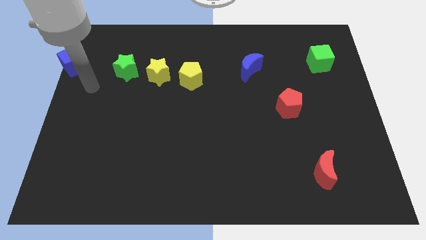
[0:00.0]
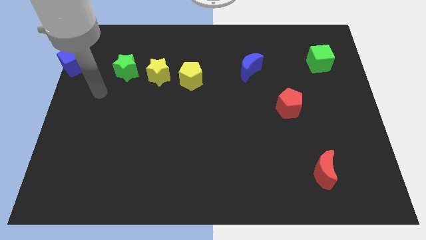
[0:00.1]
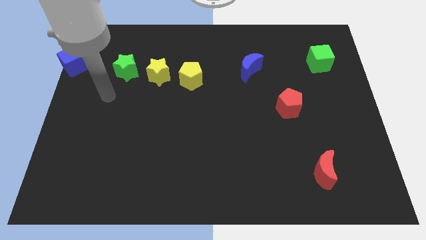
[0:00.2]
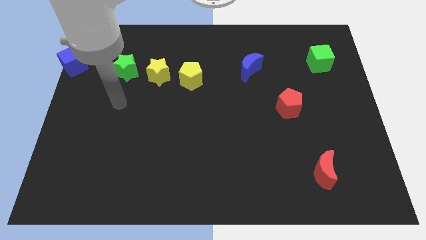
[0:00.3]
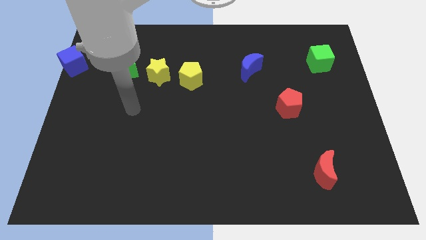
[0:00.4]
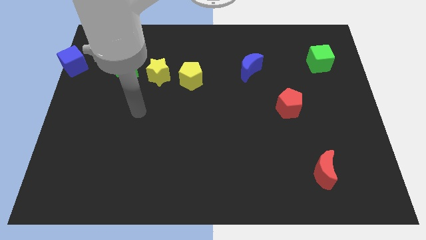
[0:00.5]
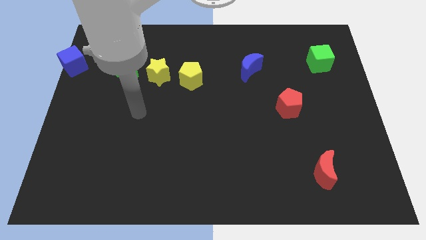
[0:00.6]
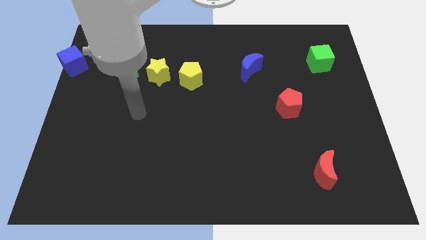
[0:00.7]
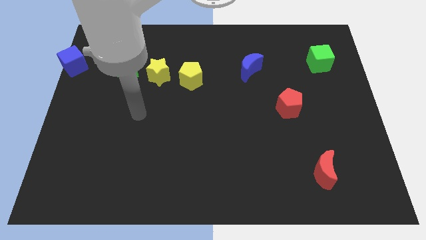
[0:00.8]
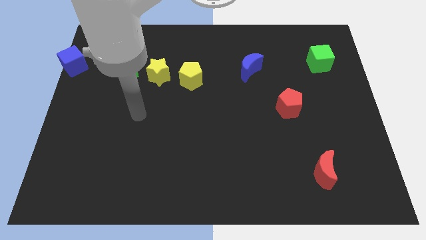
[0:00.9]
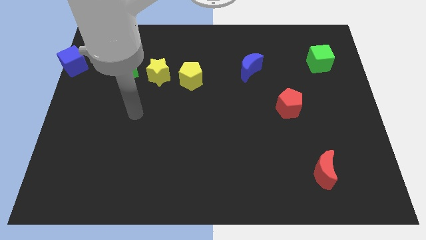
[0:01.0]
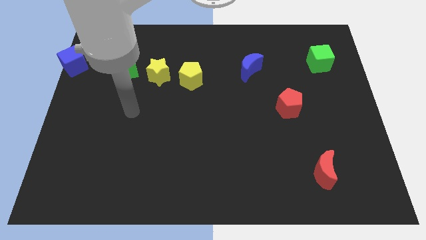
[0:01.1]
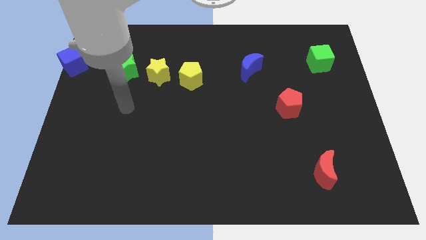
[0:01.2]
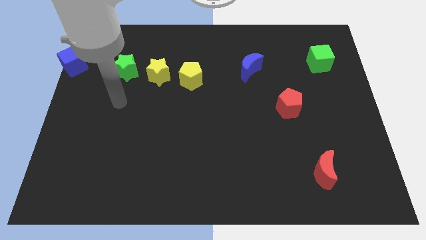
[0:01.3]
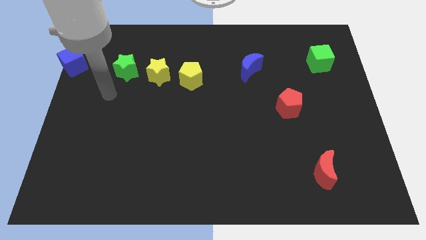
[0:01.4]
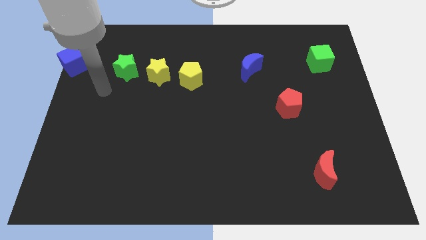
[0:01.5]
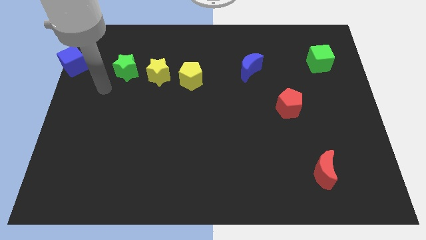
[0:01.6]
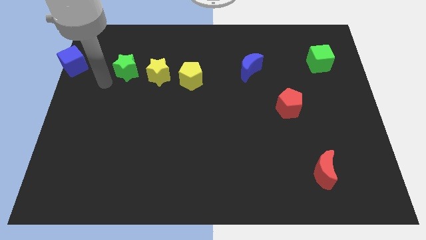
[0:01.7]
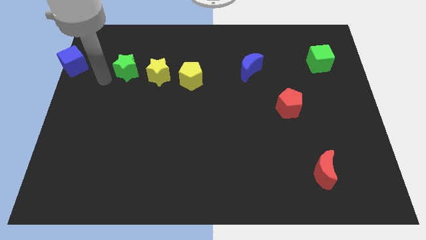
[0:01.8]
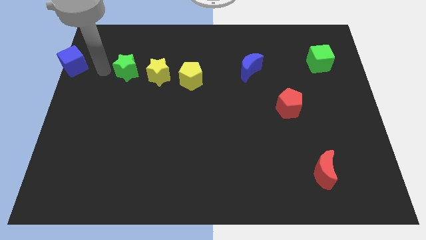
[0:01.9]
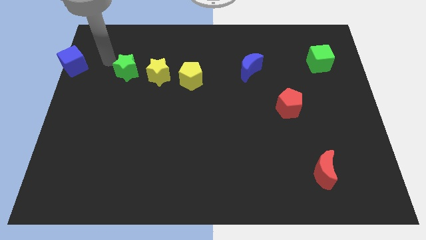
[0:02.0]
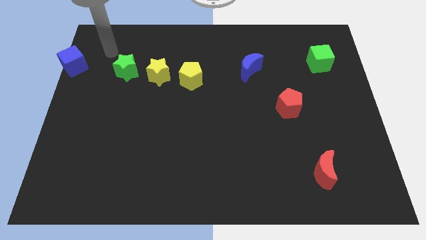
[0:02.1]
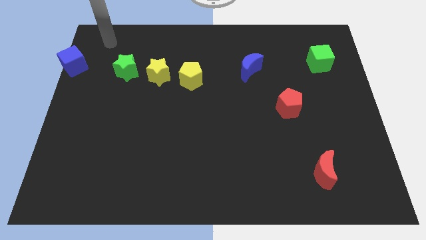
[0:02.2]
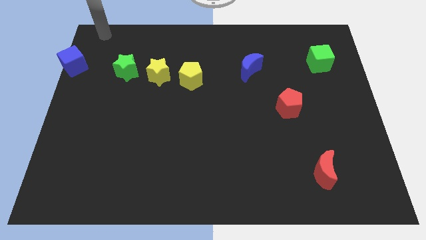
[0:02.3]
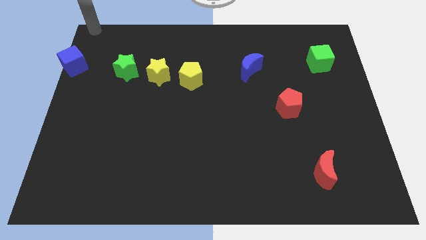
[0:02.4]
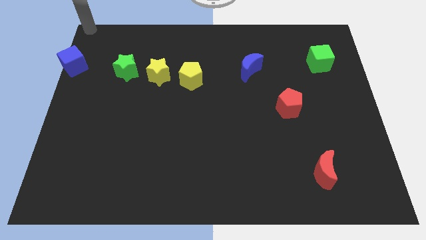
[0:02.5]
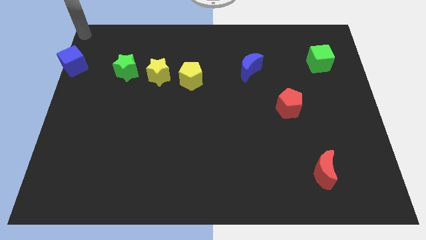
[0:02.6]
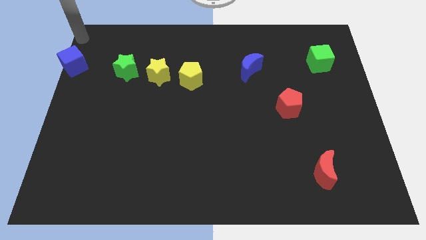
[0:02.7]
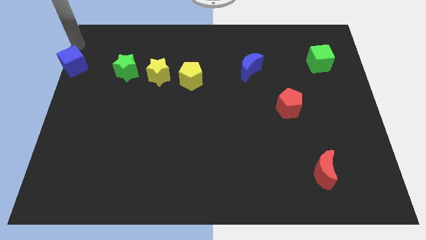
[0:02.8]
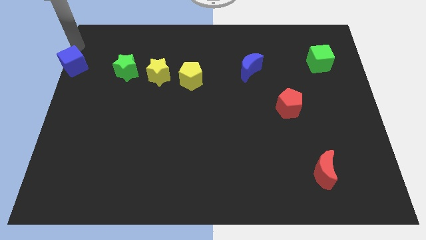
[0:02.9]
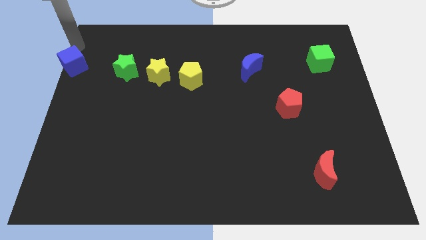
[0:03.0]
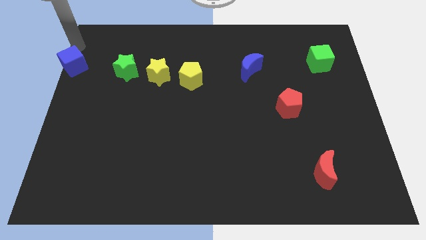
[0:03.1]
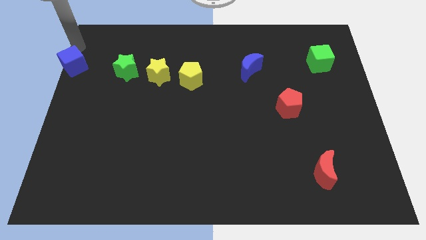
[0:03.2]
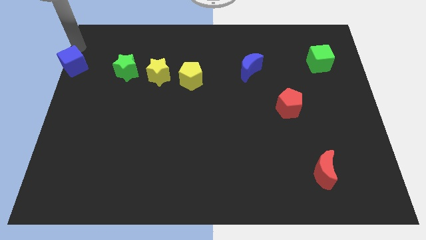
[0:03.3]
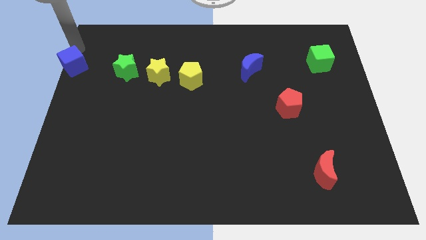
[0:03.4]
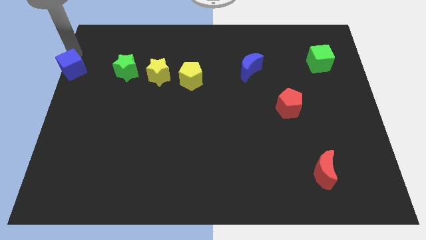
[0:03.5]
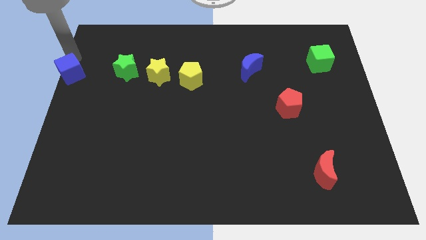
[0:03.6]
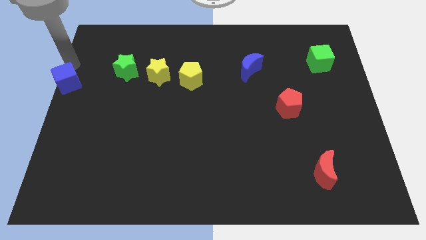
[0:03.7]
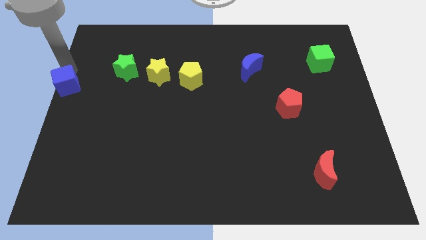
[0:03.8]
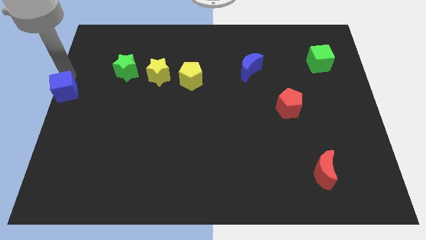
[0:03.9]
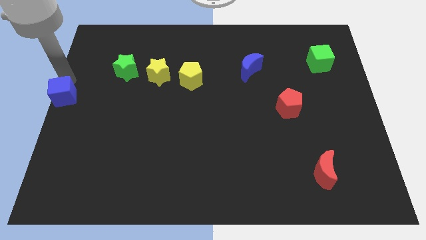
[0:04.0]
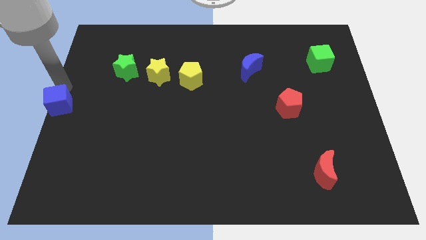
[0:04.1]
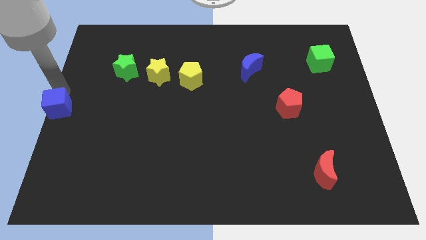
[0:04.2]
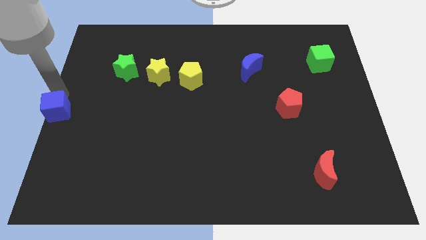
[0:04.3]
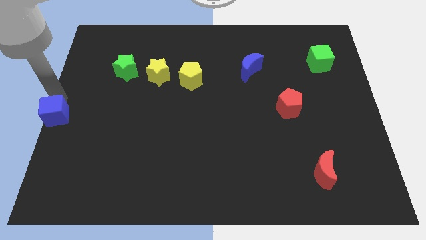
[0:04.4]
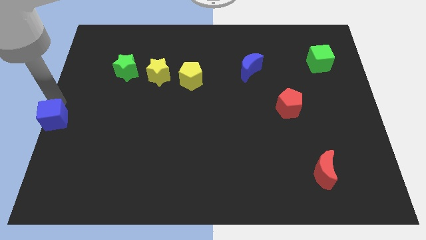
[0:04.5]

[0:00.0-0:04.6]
move the blue cube to the center left of the table

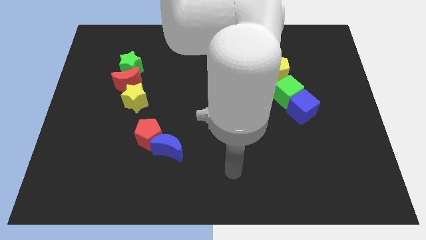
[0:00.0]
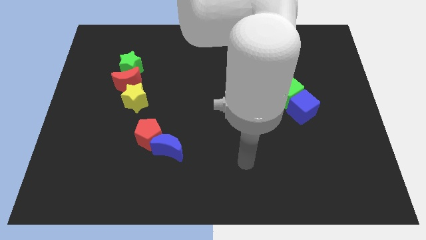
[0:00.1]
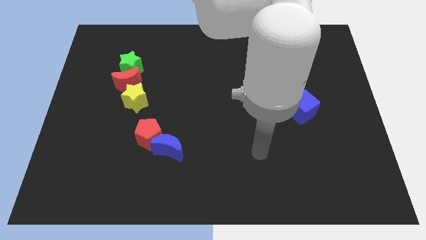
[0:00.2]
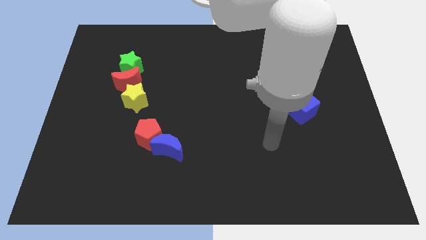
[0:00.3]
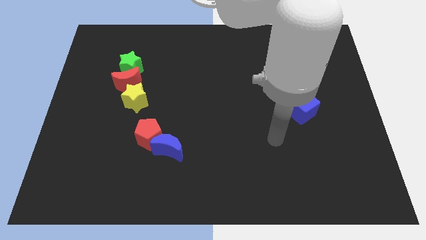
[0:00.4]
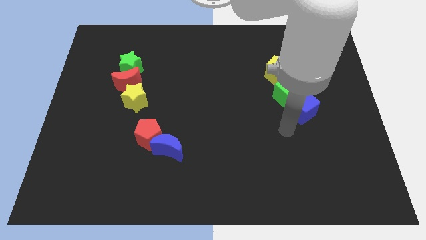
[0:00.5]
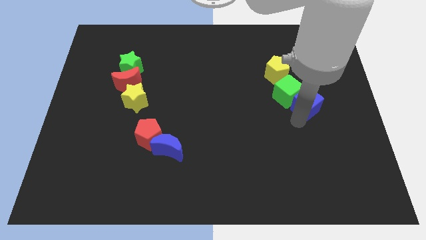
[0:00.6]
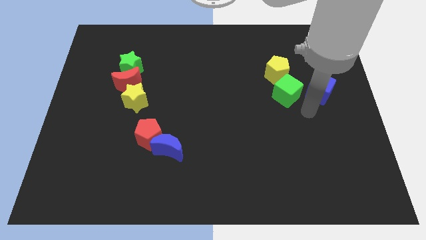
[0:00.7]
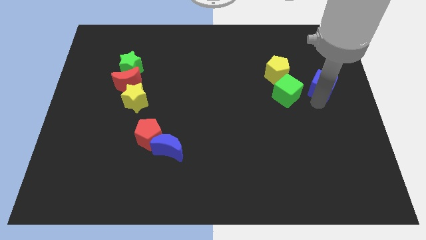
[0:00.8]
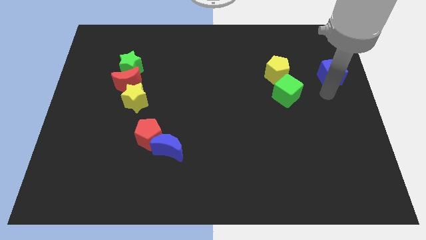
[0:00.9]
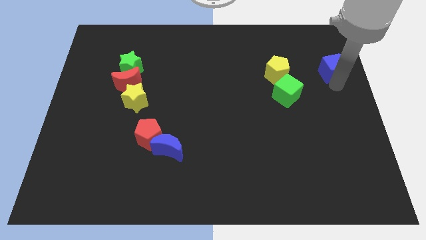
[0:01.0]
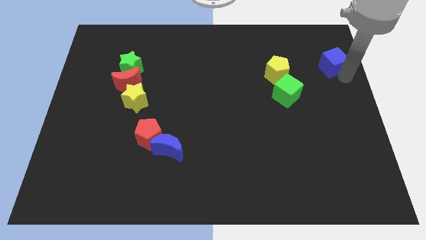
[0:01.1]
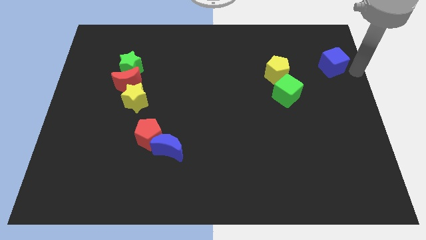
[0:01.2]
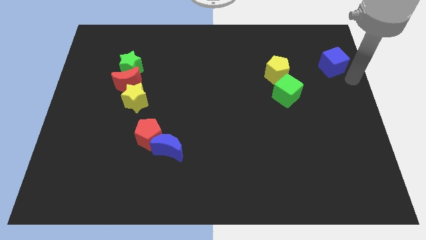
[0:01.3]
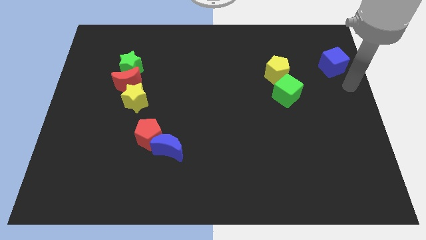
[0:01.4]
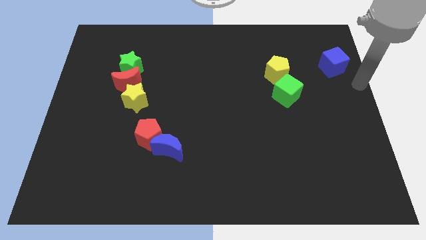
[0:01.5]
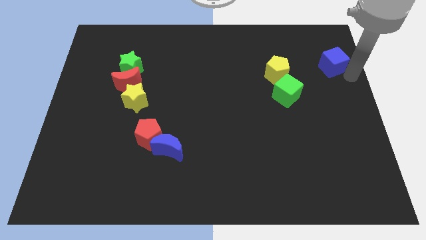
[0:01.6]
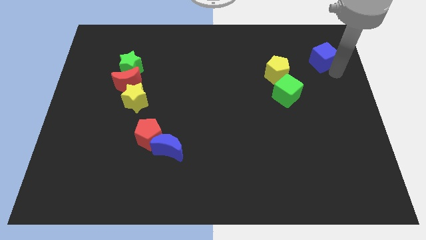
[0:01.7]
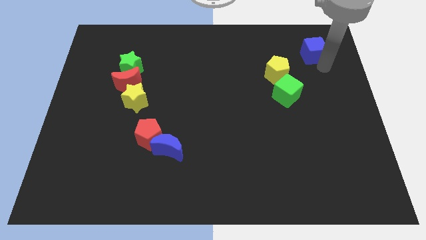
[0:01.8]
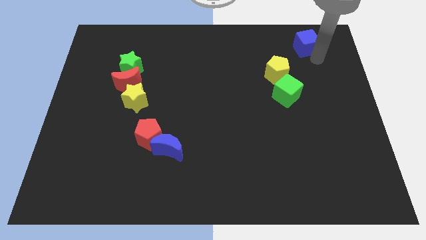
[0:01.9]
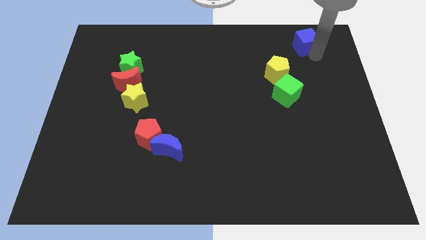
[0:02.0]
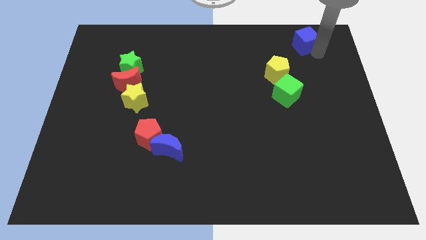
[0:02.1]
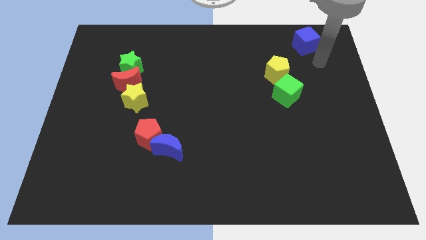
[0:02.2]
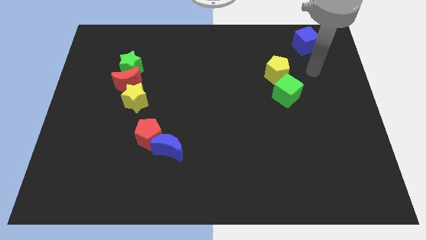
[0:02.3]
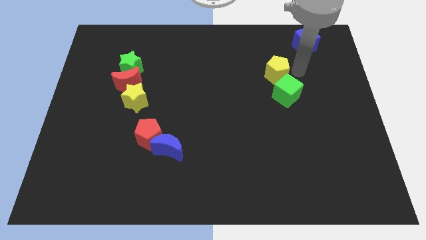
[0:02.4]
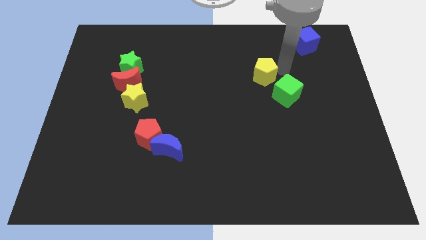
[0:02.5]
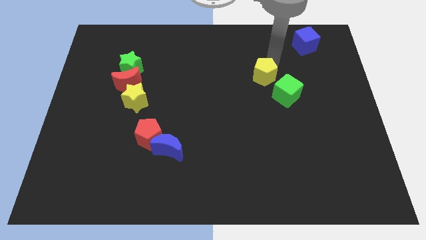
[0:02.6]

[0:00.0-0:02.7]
separate blue cube from the green cube

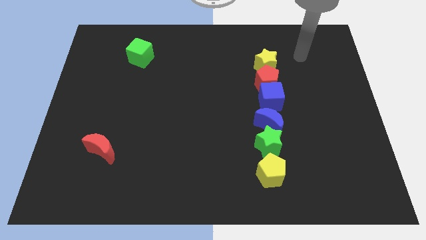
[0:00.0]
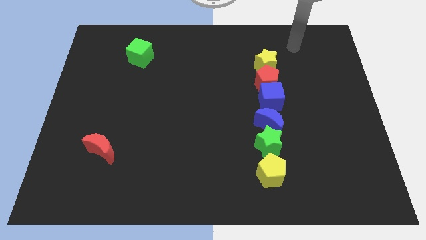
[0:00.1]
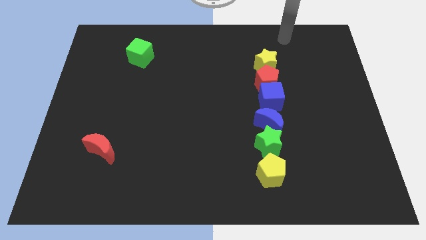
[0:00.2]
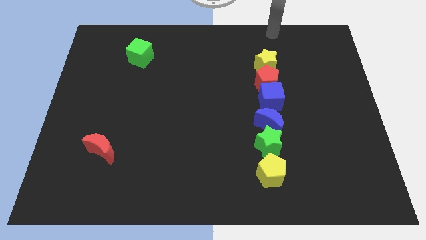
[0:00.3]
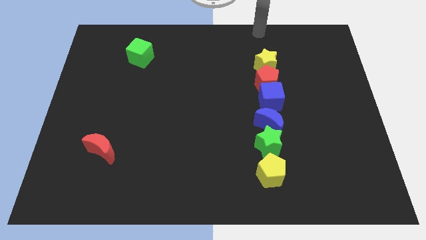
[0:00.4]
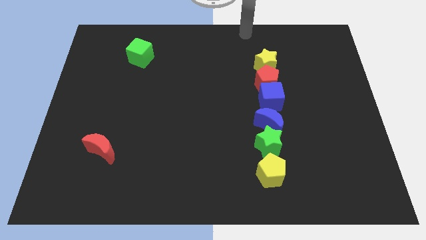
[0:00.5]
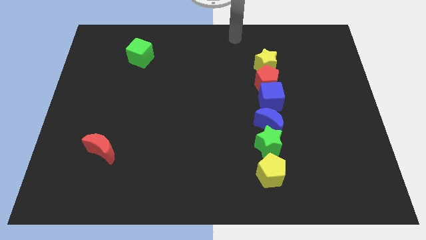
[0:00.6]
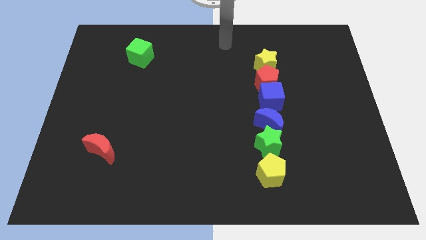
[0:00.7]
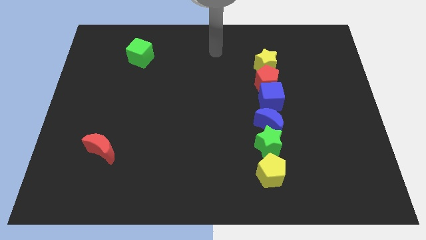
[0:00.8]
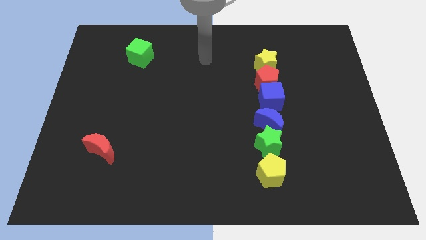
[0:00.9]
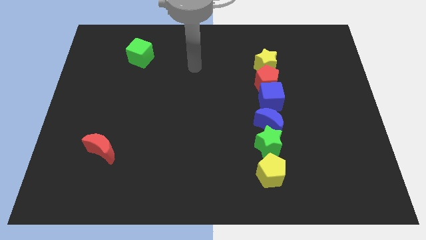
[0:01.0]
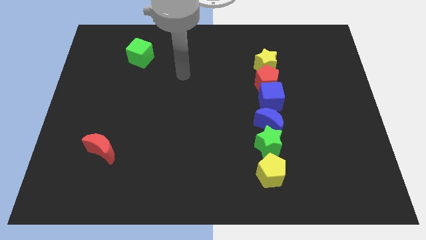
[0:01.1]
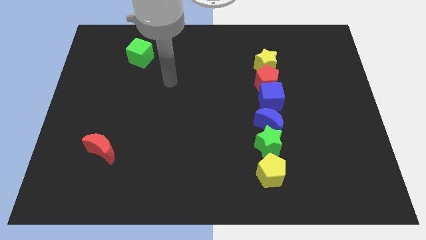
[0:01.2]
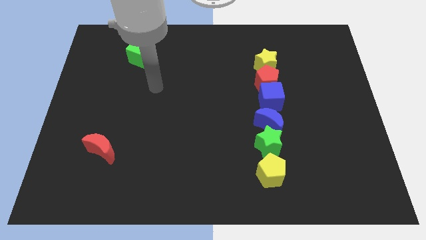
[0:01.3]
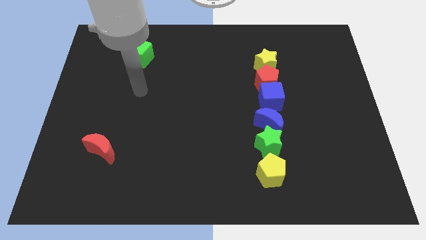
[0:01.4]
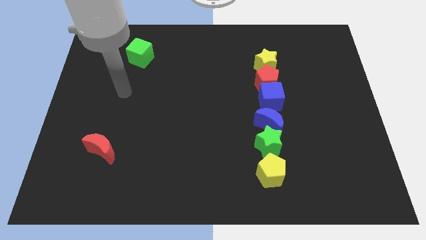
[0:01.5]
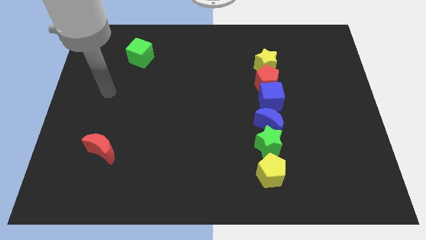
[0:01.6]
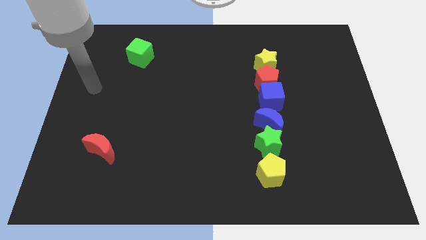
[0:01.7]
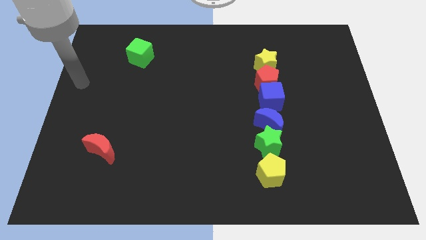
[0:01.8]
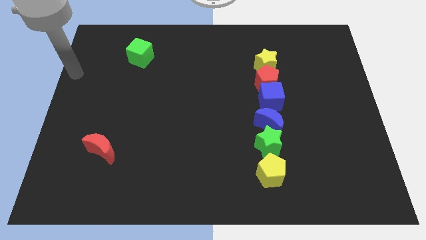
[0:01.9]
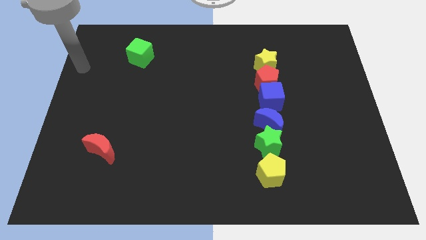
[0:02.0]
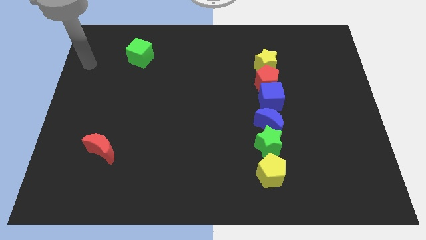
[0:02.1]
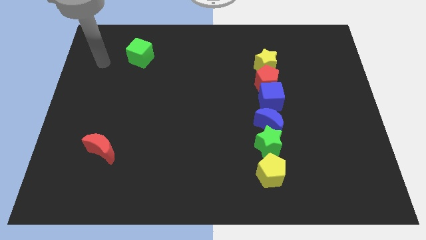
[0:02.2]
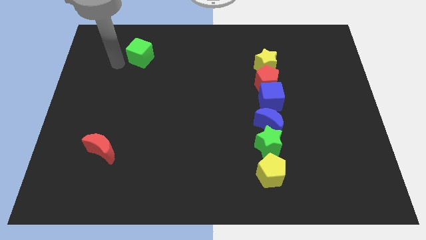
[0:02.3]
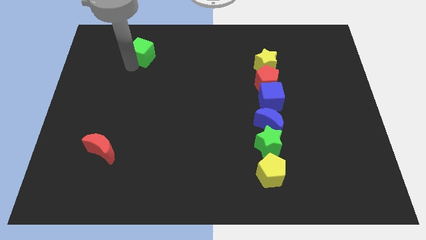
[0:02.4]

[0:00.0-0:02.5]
point your arm at the bottom of the green cube
